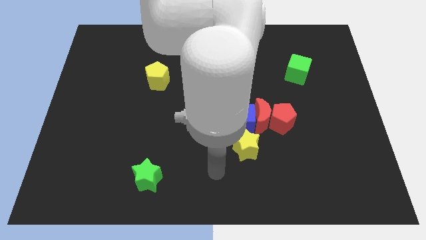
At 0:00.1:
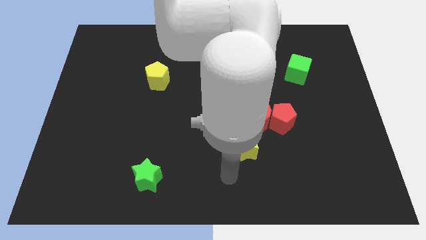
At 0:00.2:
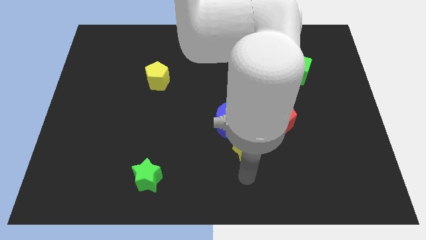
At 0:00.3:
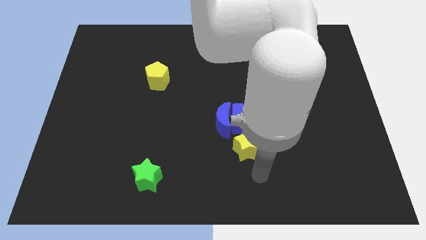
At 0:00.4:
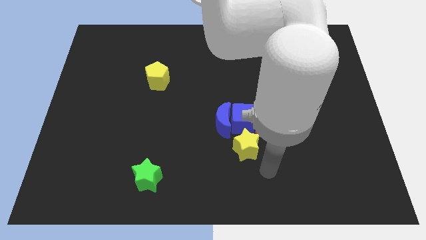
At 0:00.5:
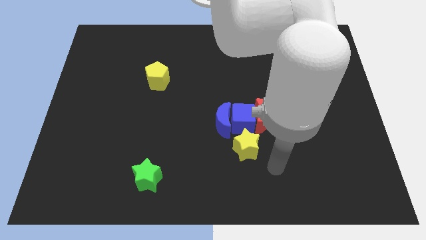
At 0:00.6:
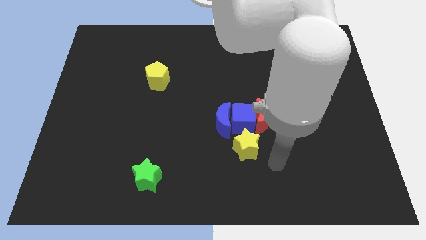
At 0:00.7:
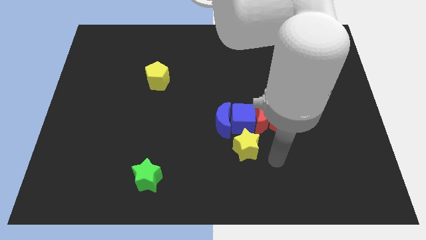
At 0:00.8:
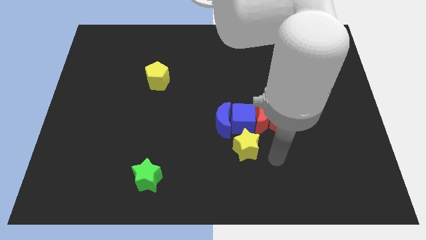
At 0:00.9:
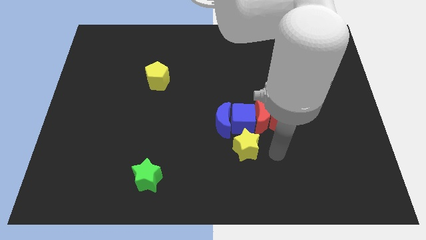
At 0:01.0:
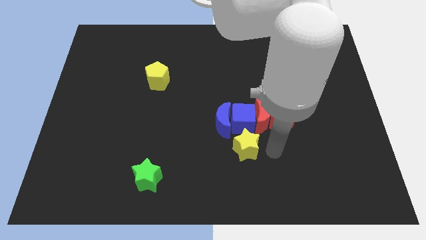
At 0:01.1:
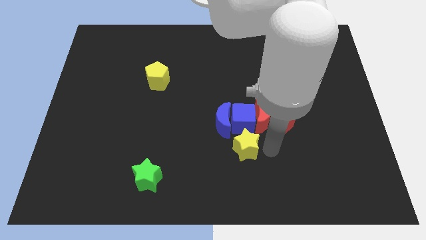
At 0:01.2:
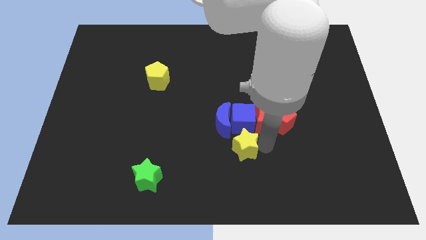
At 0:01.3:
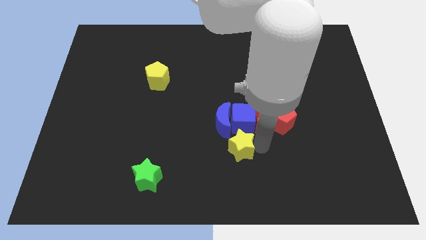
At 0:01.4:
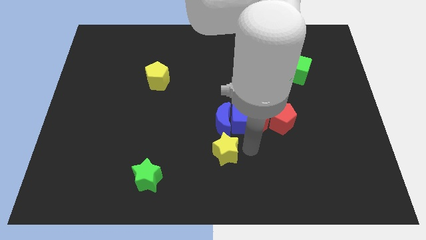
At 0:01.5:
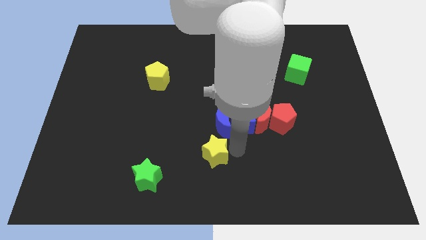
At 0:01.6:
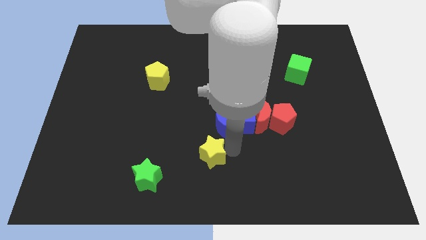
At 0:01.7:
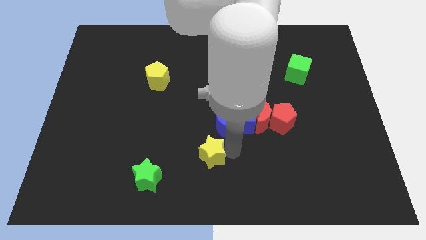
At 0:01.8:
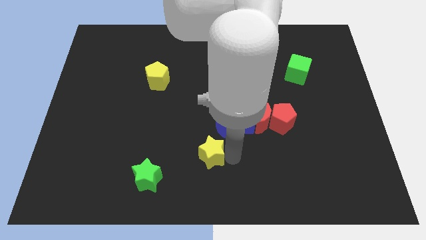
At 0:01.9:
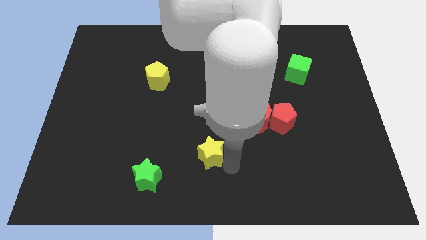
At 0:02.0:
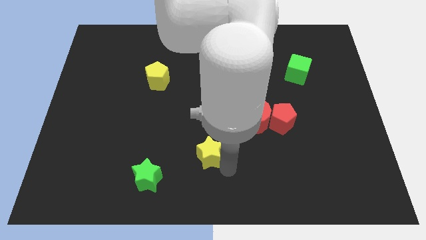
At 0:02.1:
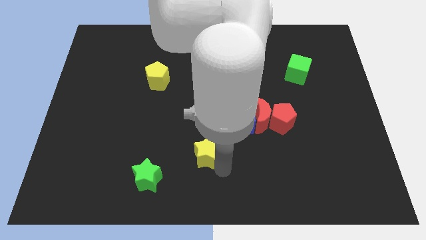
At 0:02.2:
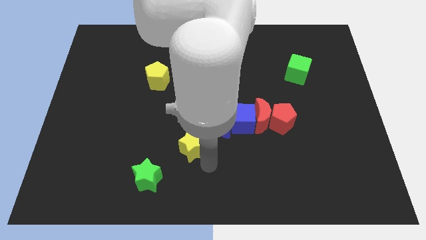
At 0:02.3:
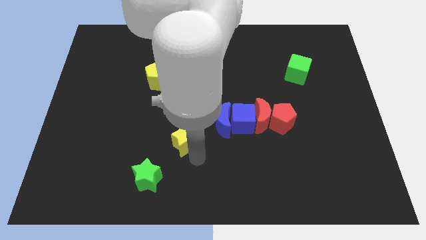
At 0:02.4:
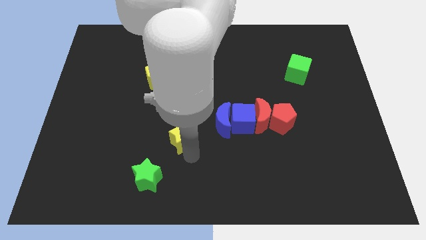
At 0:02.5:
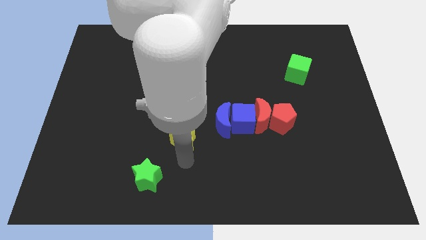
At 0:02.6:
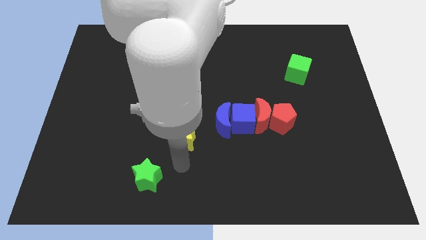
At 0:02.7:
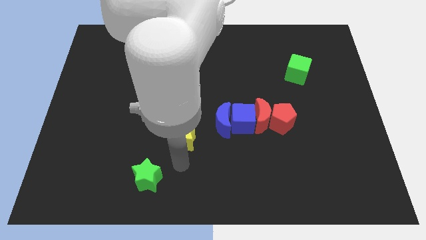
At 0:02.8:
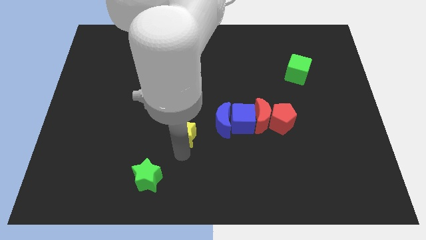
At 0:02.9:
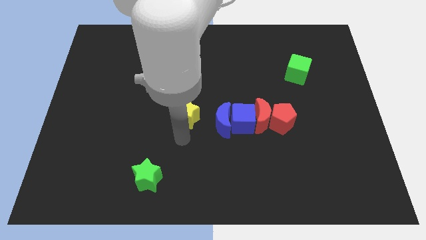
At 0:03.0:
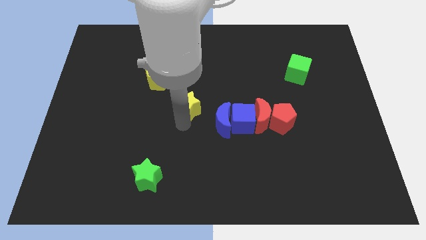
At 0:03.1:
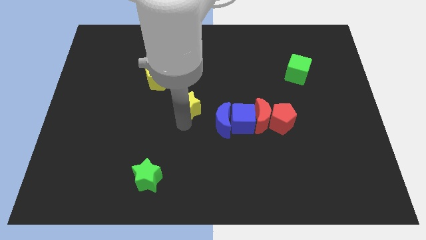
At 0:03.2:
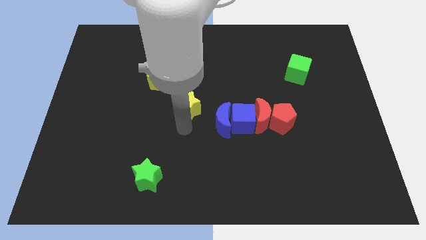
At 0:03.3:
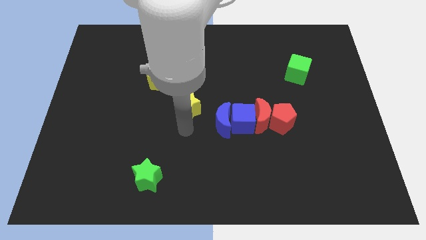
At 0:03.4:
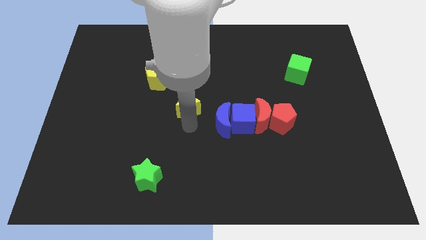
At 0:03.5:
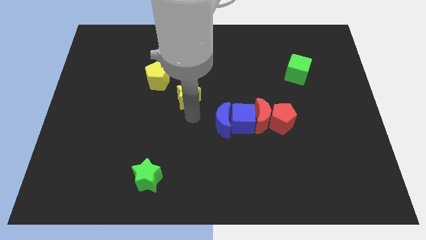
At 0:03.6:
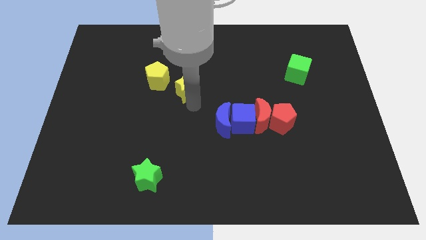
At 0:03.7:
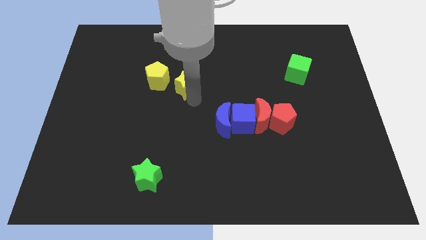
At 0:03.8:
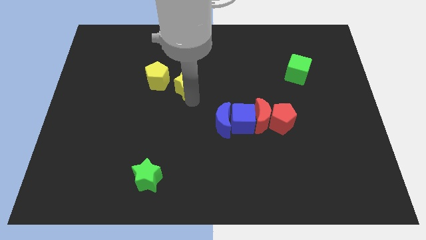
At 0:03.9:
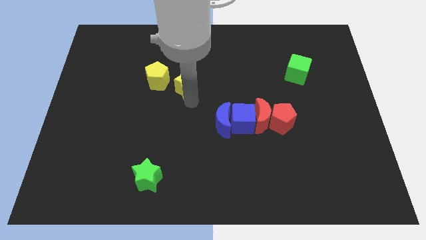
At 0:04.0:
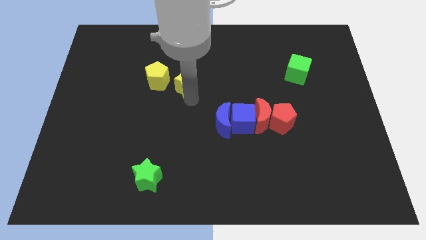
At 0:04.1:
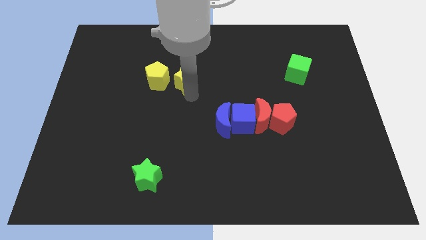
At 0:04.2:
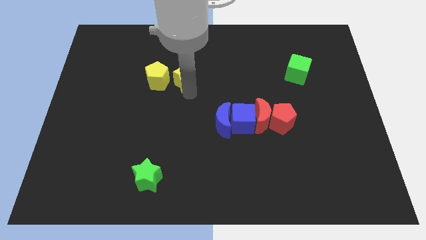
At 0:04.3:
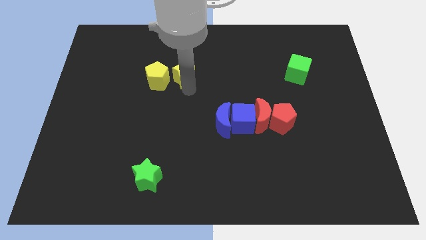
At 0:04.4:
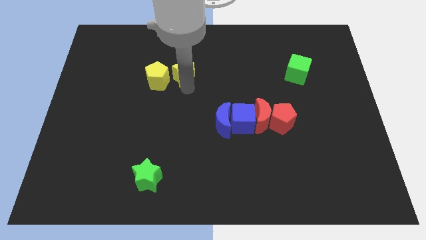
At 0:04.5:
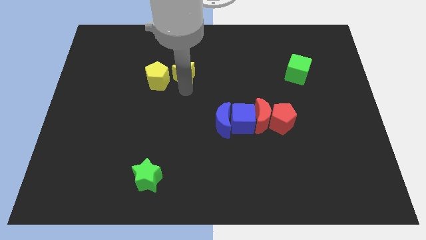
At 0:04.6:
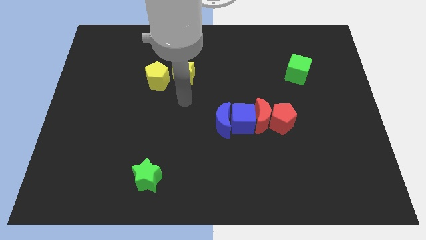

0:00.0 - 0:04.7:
place the yellow star right to the yellow pentagon

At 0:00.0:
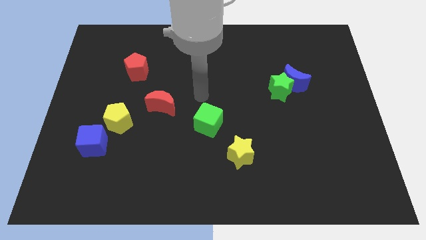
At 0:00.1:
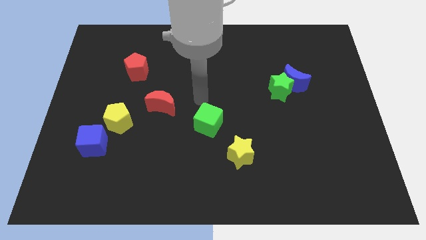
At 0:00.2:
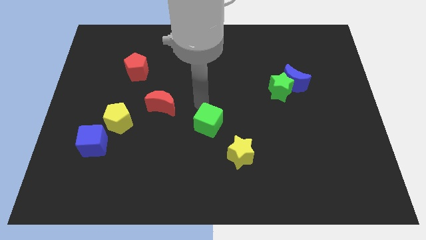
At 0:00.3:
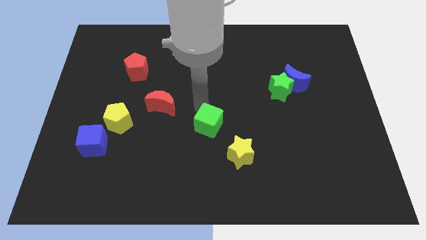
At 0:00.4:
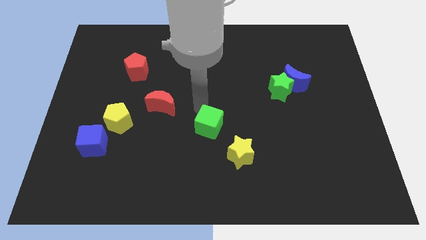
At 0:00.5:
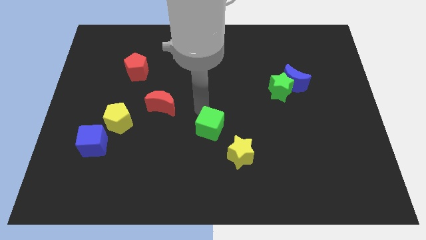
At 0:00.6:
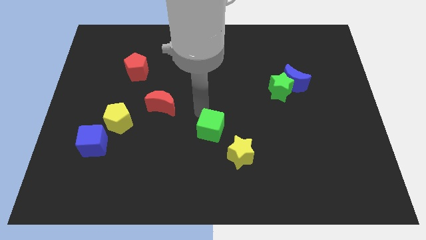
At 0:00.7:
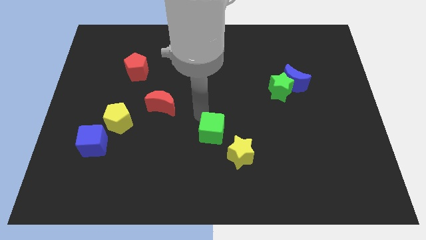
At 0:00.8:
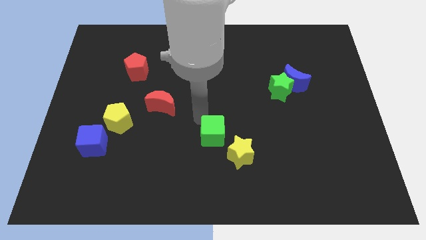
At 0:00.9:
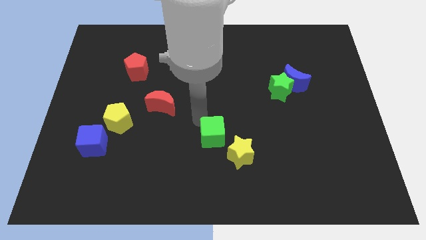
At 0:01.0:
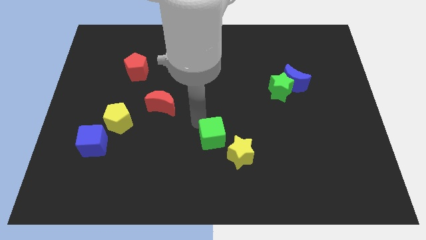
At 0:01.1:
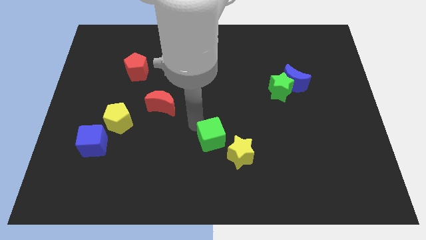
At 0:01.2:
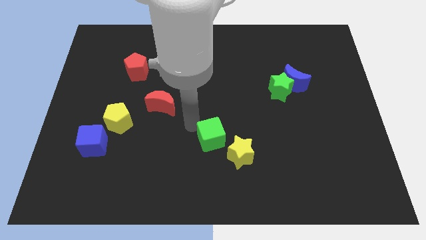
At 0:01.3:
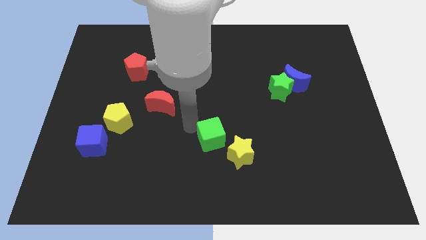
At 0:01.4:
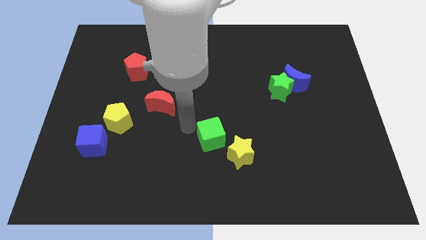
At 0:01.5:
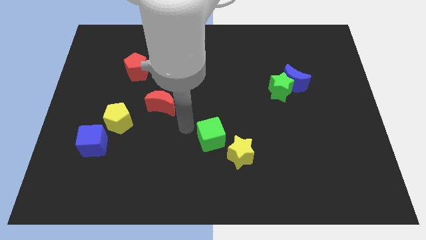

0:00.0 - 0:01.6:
push the green cube slightly to the bottom

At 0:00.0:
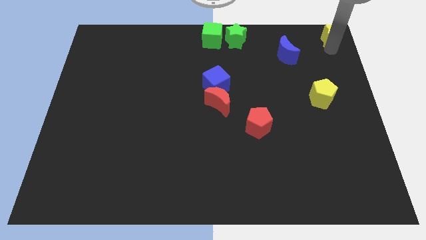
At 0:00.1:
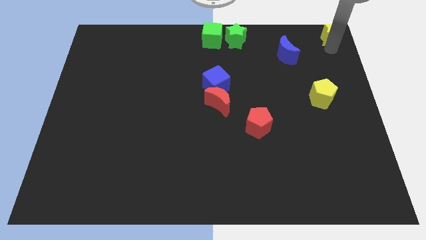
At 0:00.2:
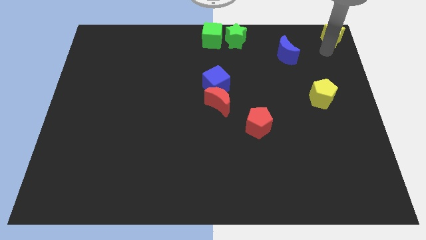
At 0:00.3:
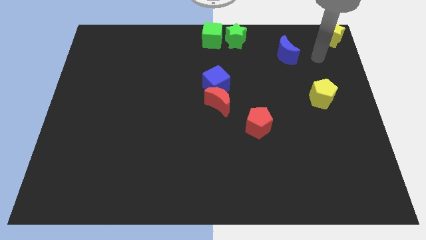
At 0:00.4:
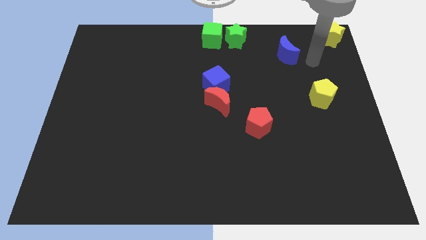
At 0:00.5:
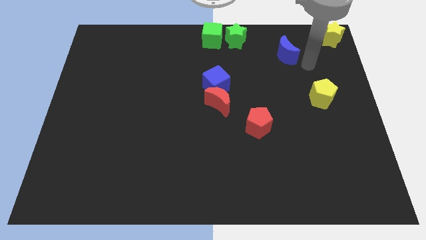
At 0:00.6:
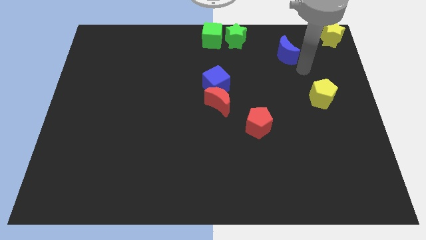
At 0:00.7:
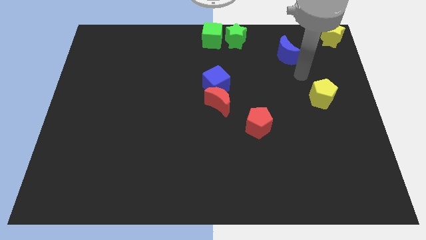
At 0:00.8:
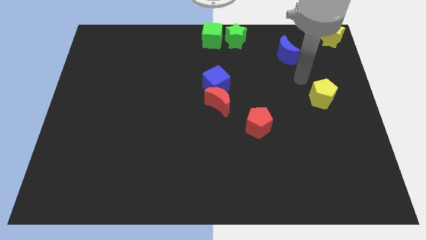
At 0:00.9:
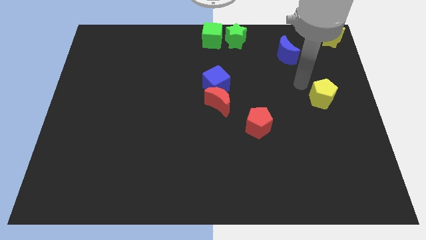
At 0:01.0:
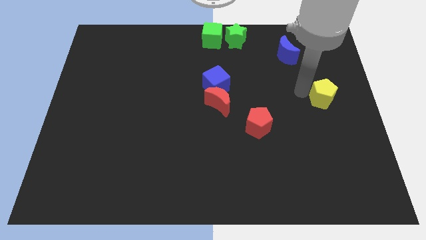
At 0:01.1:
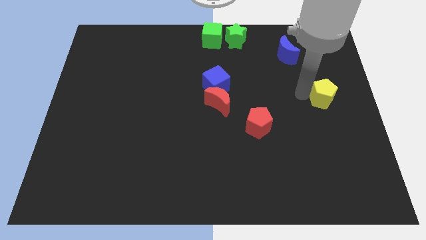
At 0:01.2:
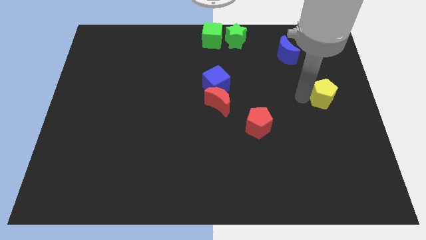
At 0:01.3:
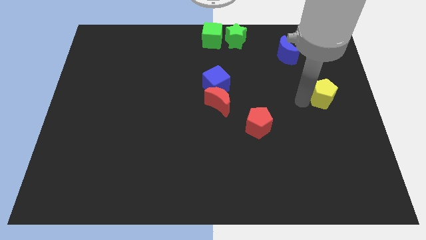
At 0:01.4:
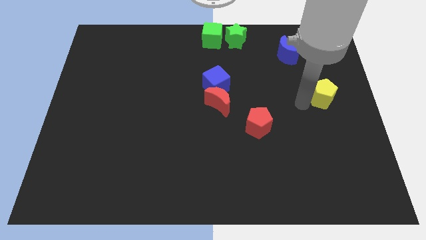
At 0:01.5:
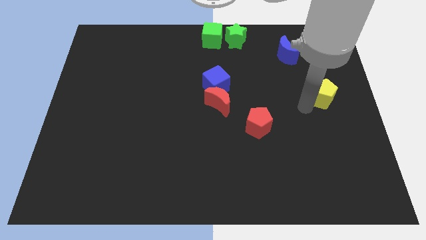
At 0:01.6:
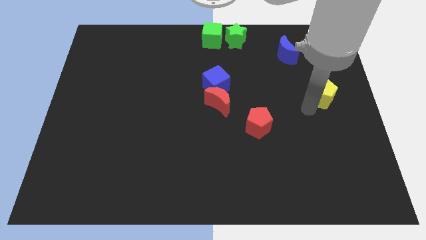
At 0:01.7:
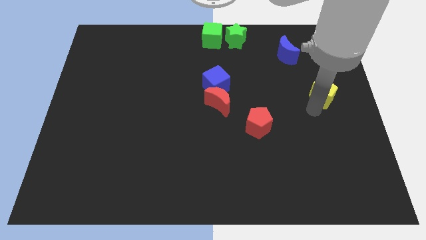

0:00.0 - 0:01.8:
move your arm away from the yellow star

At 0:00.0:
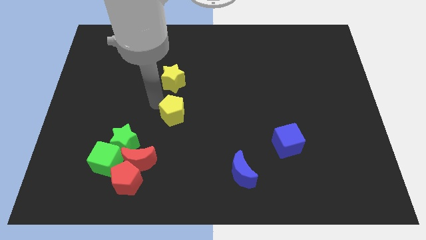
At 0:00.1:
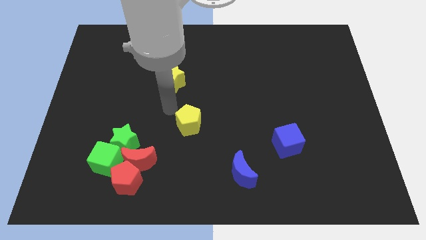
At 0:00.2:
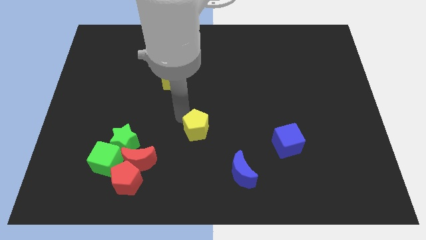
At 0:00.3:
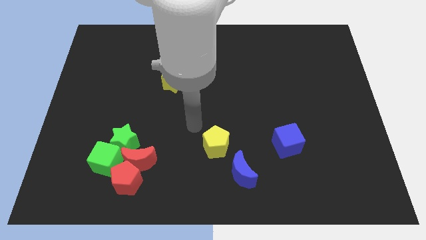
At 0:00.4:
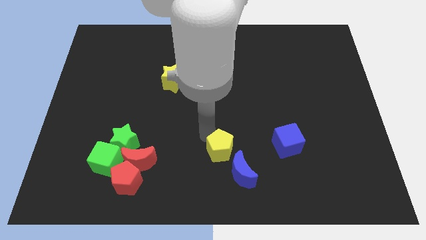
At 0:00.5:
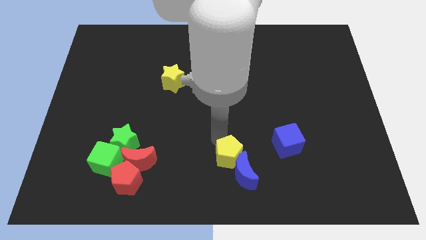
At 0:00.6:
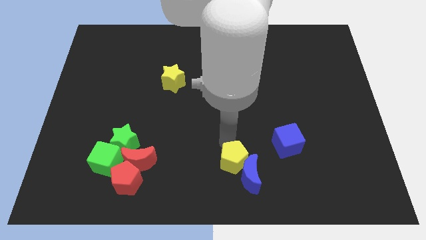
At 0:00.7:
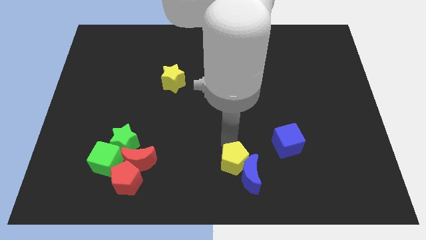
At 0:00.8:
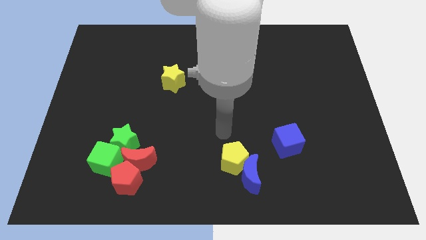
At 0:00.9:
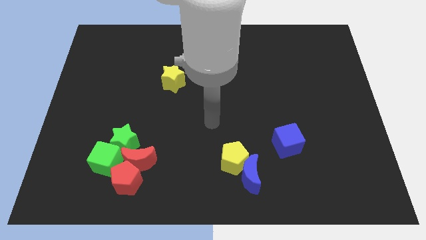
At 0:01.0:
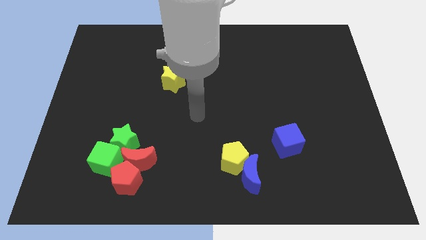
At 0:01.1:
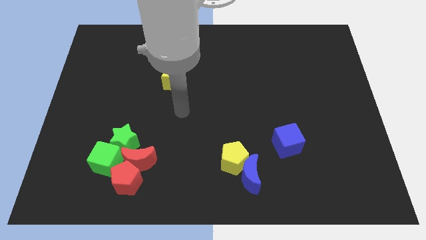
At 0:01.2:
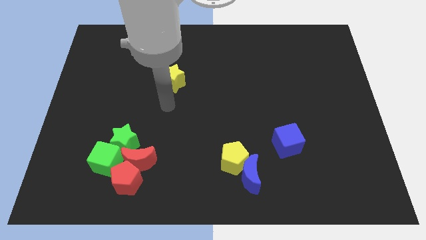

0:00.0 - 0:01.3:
push the yellow pentagon to the left of the blue crescent
